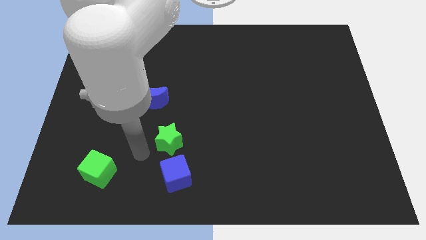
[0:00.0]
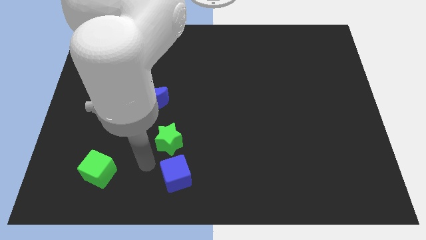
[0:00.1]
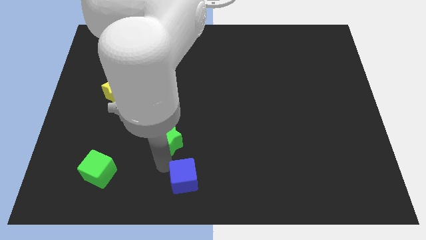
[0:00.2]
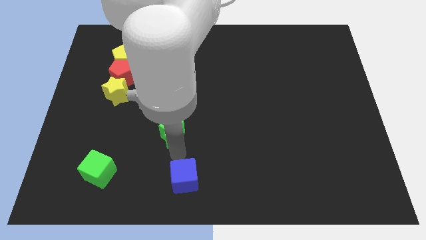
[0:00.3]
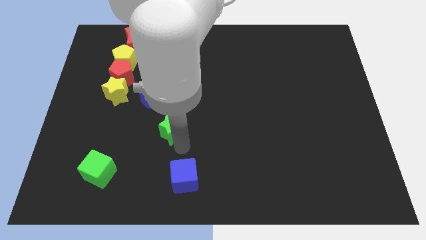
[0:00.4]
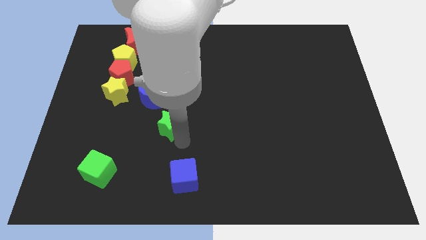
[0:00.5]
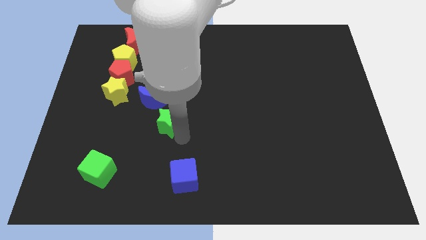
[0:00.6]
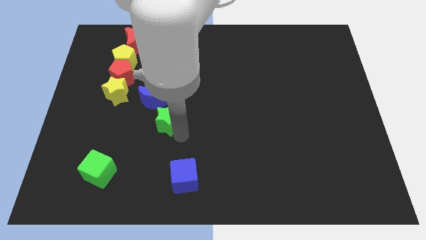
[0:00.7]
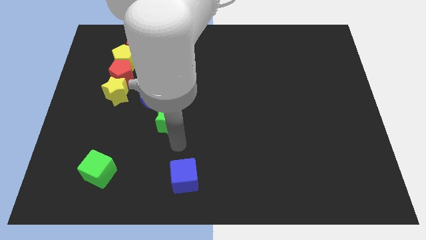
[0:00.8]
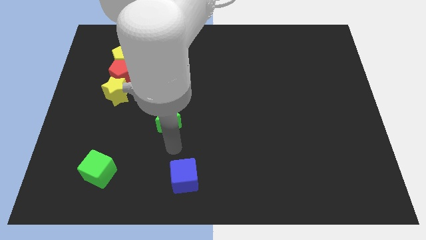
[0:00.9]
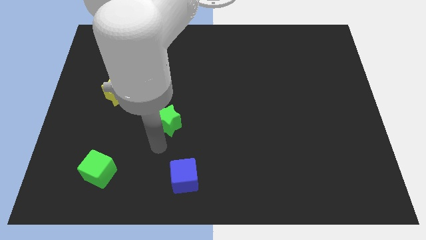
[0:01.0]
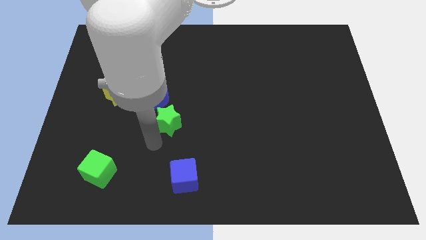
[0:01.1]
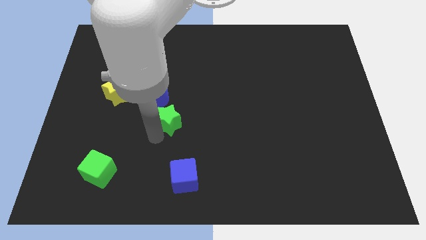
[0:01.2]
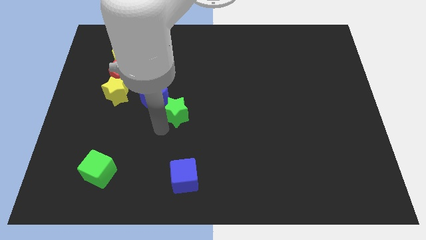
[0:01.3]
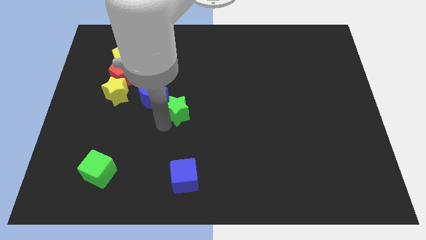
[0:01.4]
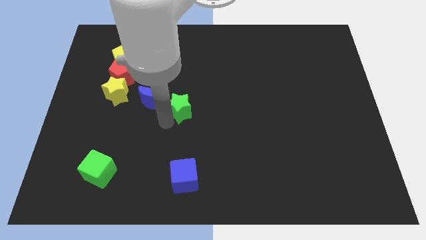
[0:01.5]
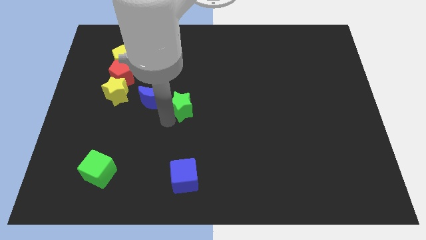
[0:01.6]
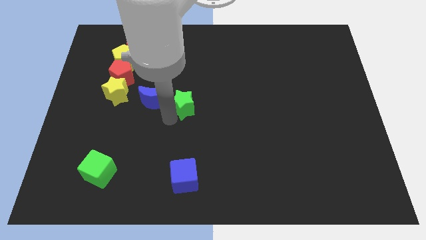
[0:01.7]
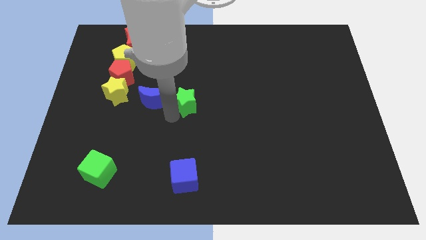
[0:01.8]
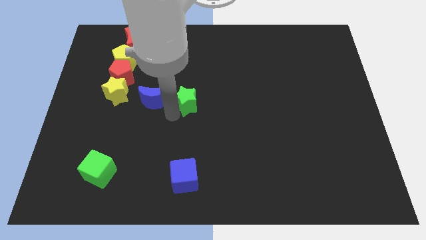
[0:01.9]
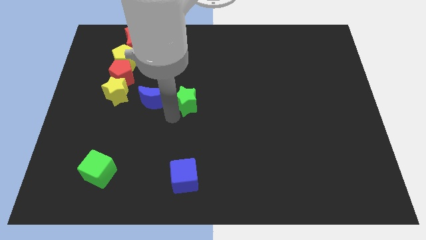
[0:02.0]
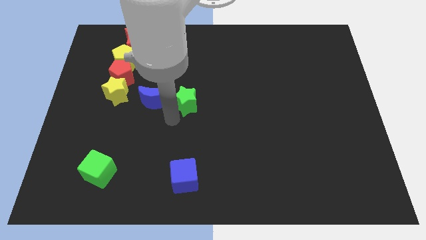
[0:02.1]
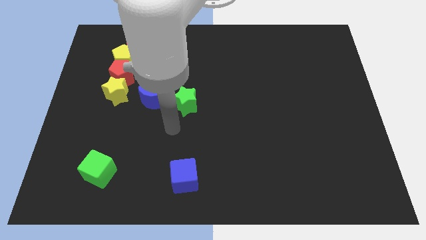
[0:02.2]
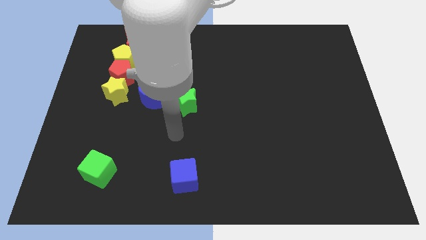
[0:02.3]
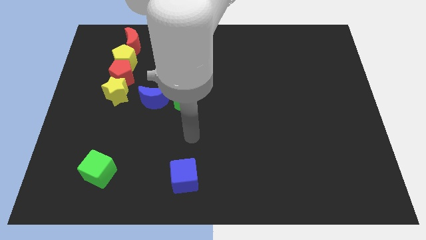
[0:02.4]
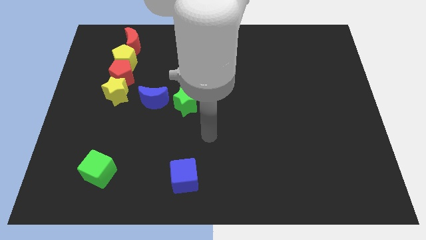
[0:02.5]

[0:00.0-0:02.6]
move the green star diagonal to the right of the blue crescent

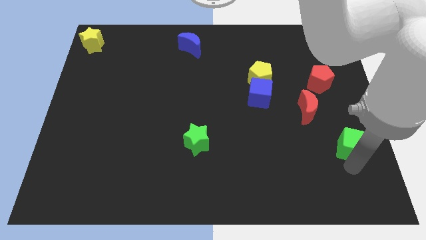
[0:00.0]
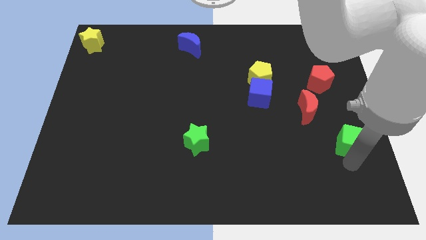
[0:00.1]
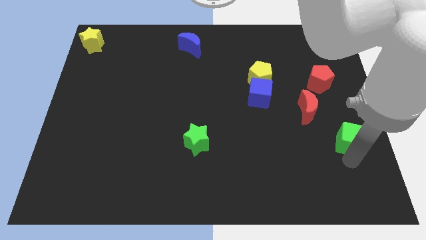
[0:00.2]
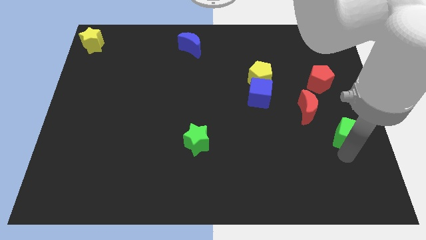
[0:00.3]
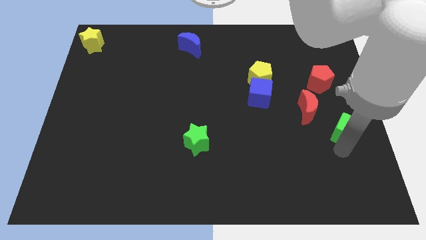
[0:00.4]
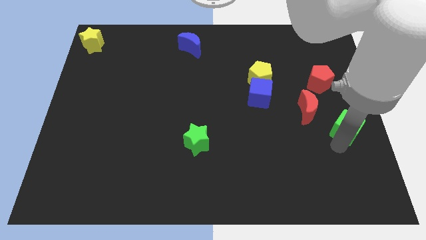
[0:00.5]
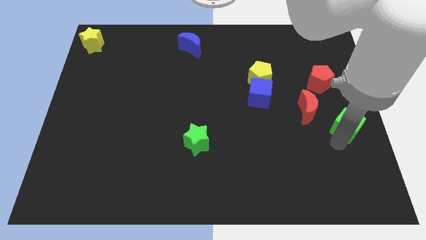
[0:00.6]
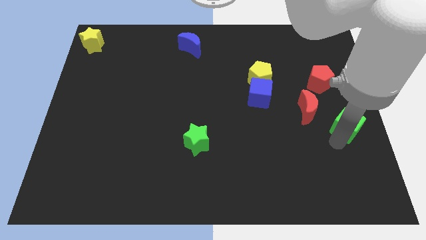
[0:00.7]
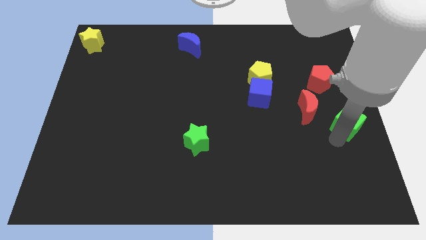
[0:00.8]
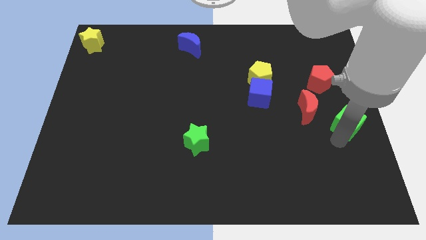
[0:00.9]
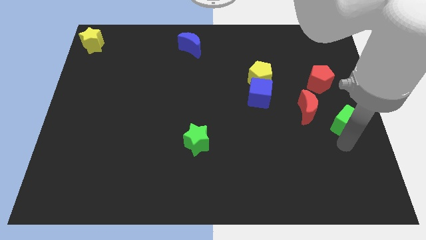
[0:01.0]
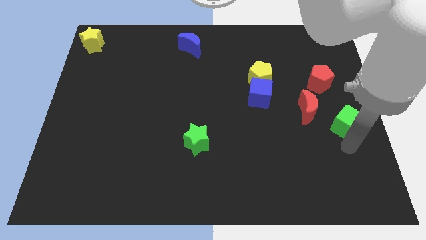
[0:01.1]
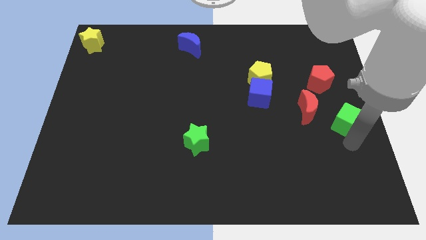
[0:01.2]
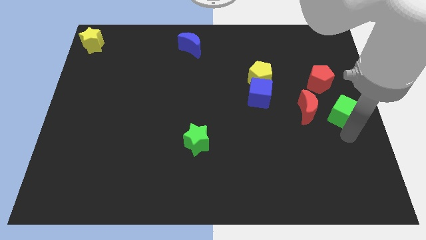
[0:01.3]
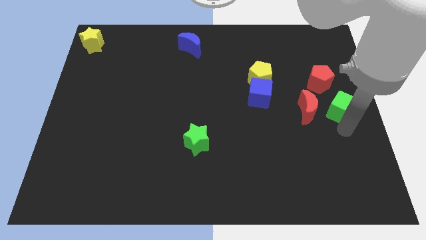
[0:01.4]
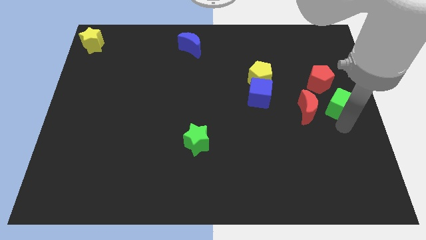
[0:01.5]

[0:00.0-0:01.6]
push the green cube to the right of the red crescent

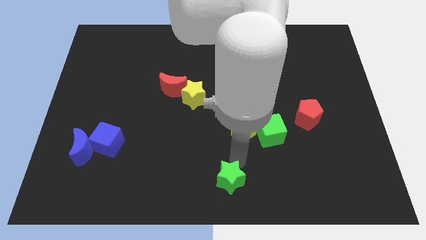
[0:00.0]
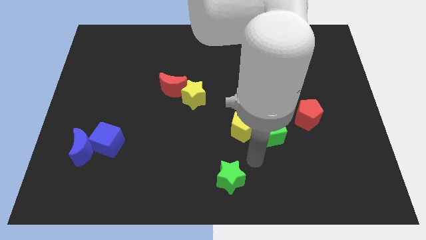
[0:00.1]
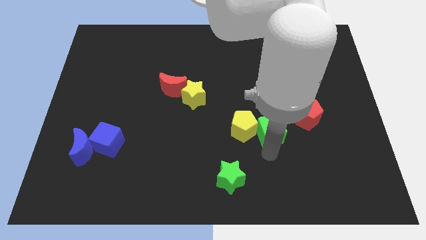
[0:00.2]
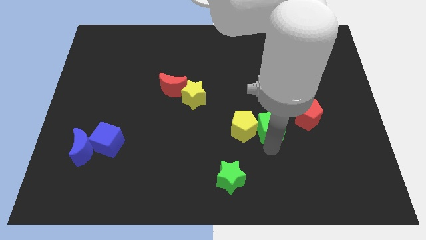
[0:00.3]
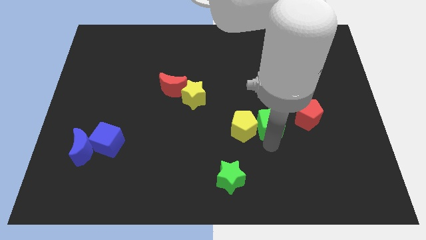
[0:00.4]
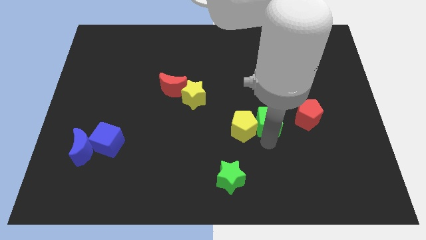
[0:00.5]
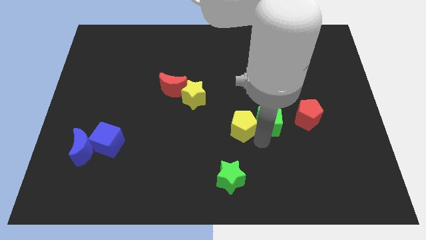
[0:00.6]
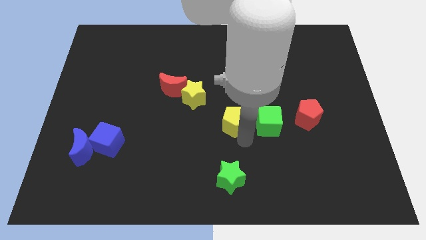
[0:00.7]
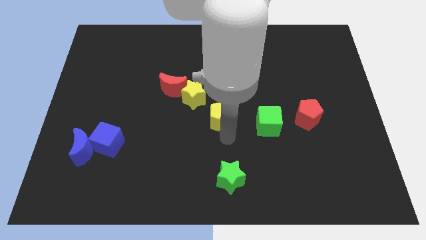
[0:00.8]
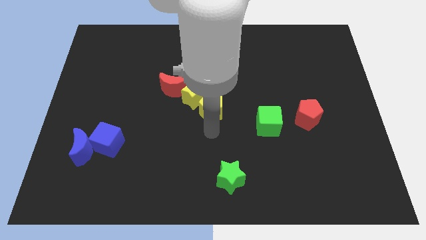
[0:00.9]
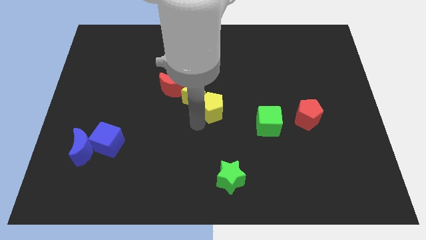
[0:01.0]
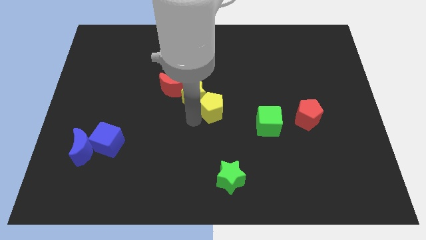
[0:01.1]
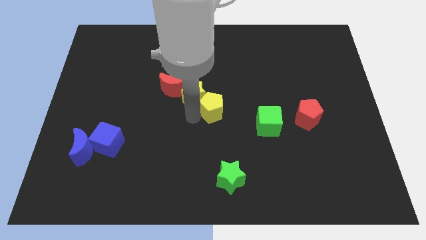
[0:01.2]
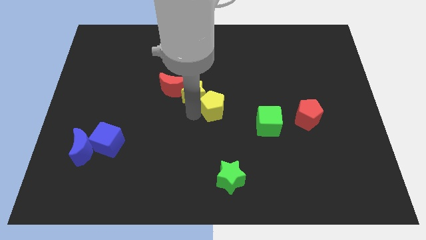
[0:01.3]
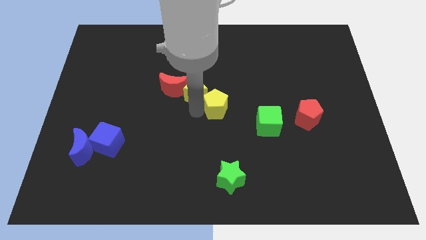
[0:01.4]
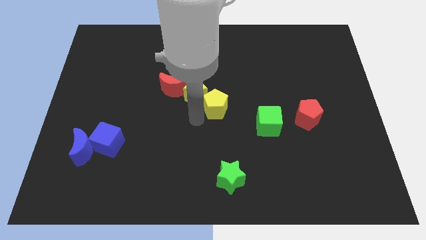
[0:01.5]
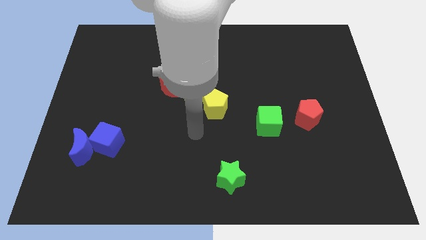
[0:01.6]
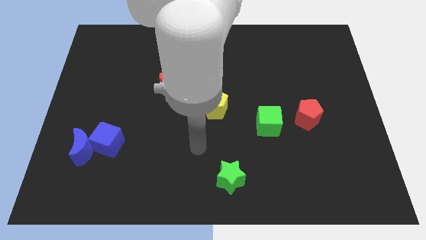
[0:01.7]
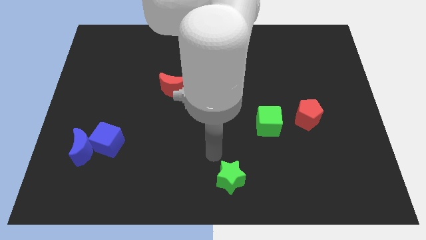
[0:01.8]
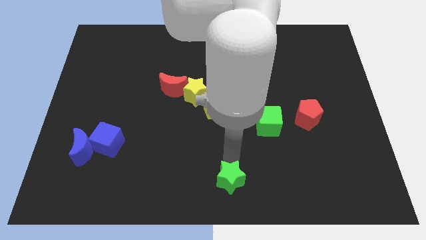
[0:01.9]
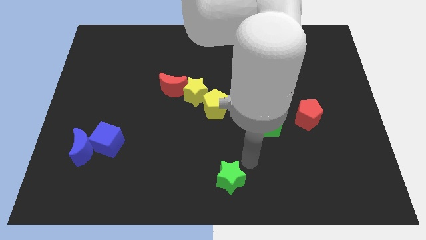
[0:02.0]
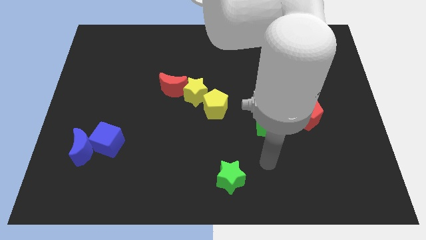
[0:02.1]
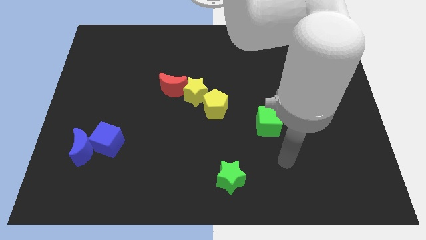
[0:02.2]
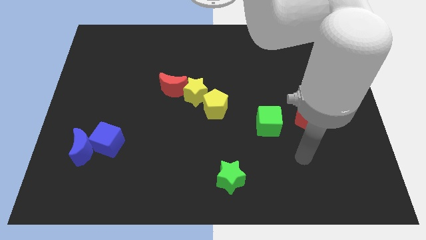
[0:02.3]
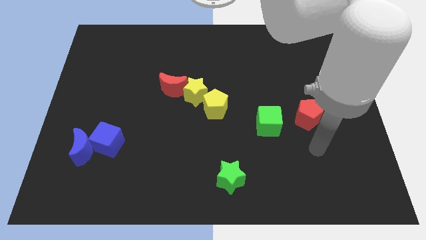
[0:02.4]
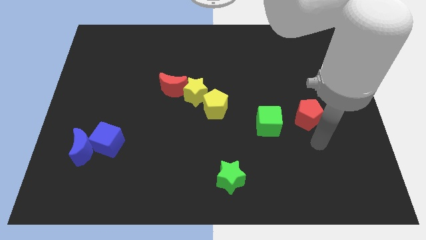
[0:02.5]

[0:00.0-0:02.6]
move the yellow pentagon into the yellow star

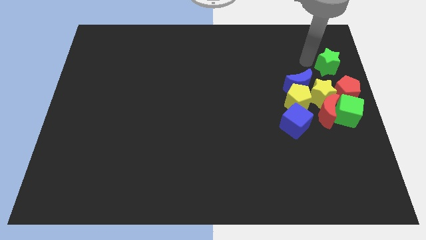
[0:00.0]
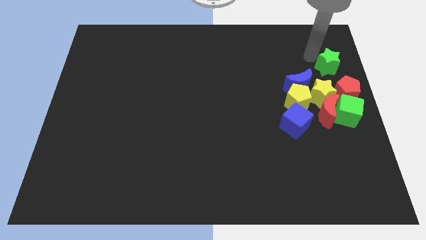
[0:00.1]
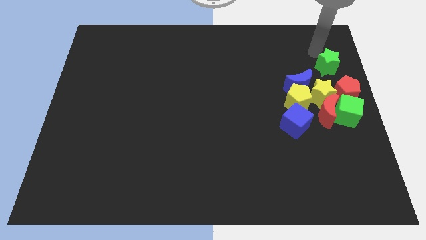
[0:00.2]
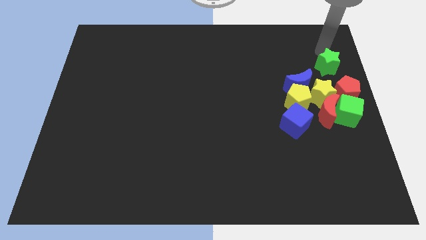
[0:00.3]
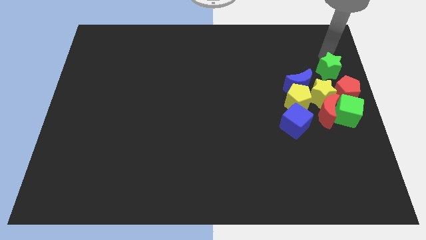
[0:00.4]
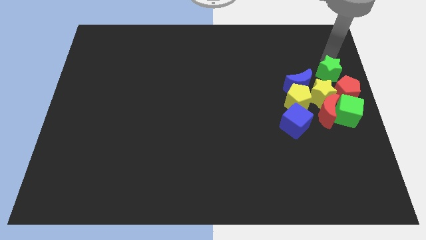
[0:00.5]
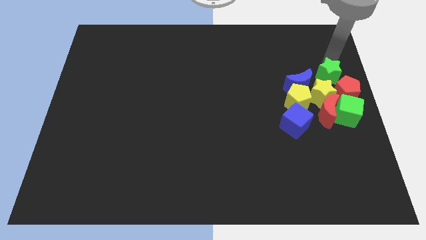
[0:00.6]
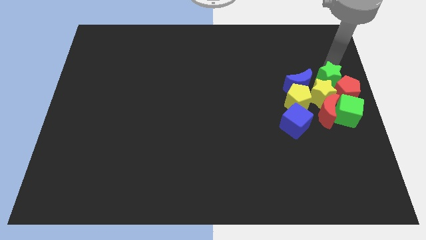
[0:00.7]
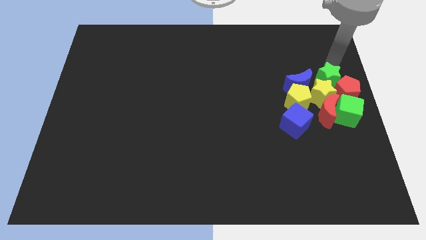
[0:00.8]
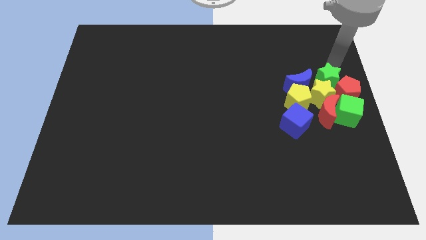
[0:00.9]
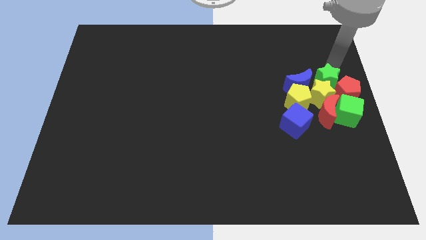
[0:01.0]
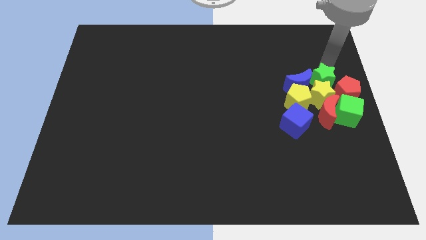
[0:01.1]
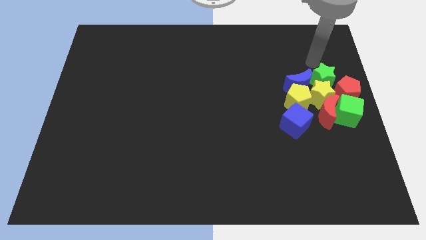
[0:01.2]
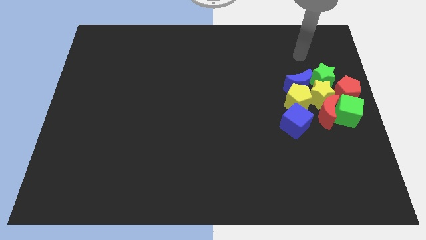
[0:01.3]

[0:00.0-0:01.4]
push the green star into the yellow star

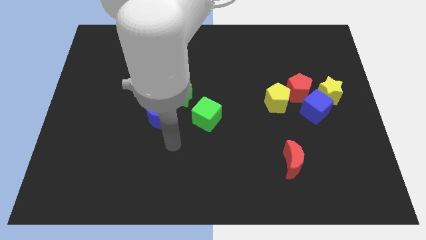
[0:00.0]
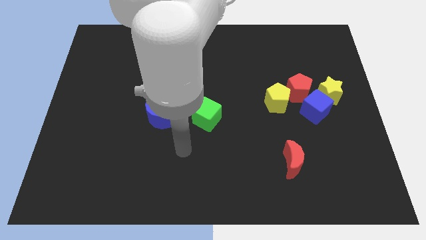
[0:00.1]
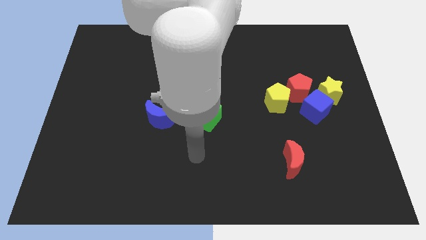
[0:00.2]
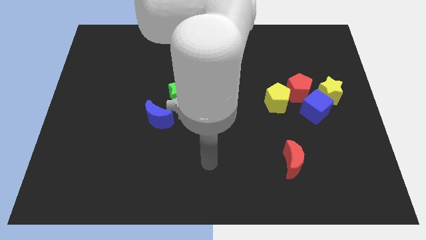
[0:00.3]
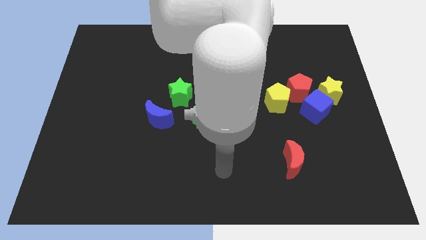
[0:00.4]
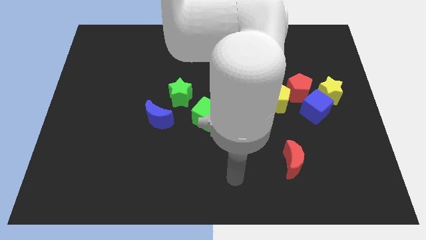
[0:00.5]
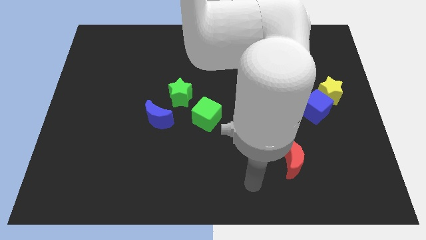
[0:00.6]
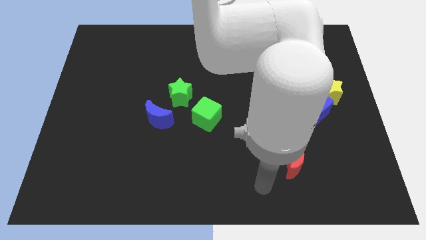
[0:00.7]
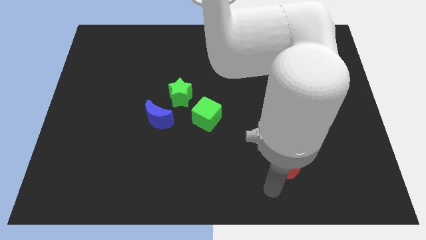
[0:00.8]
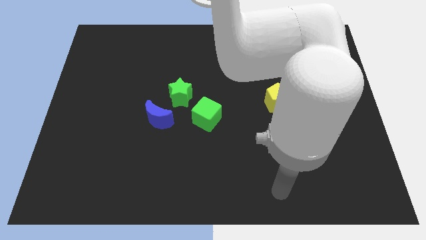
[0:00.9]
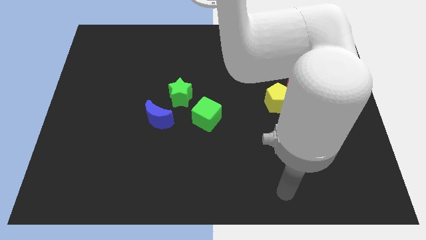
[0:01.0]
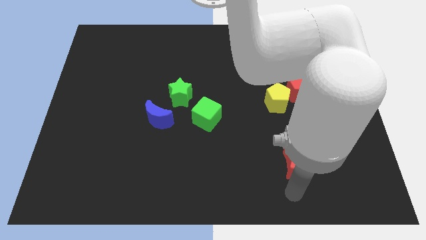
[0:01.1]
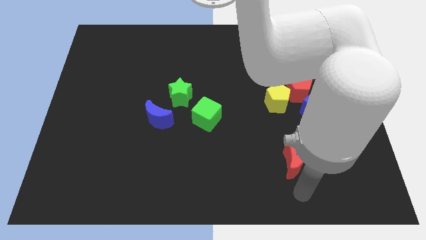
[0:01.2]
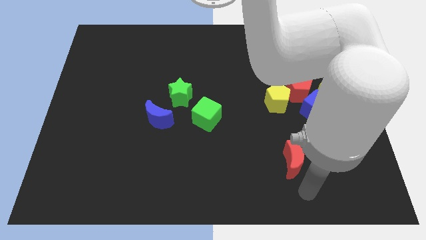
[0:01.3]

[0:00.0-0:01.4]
place your arm to the bottom side of the red moon
